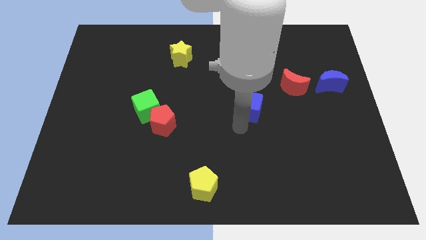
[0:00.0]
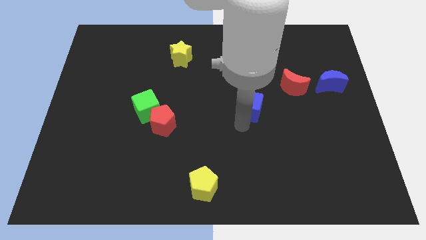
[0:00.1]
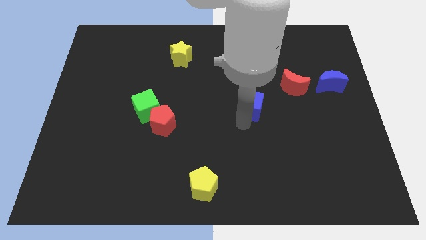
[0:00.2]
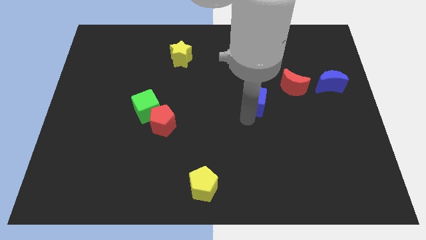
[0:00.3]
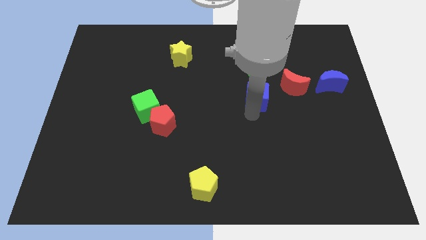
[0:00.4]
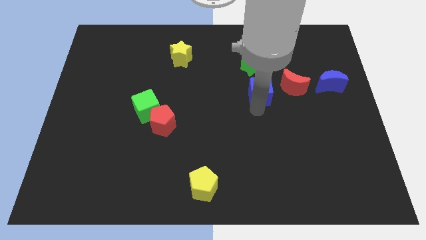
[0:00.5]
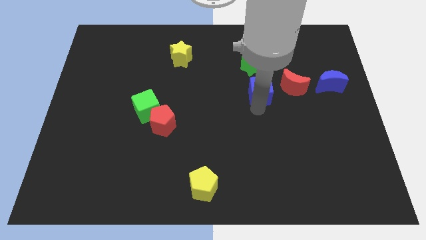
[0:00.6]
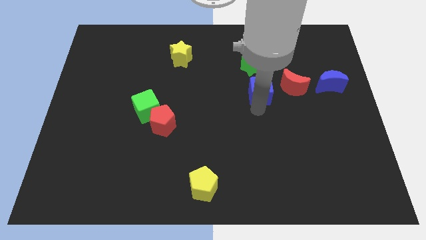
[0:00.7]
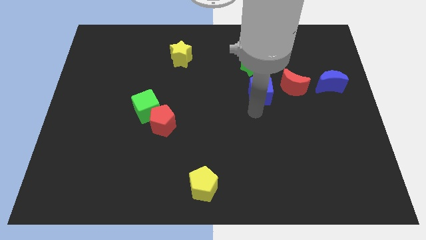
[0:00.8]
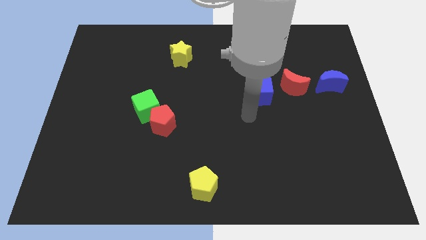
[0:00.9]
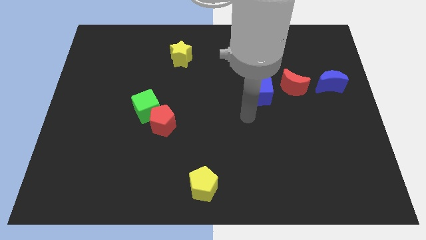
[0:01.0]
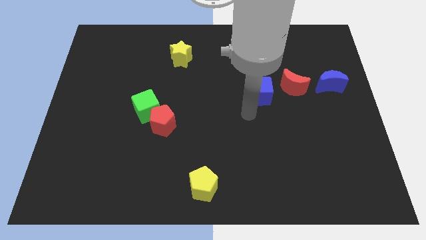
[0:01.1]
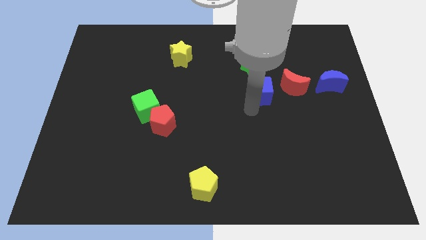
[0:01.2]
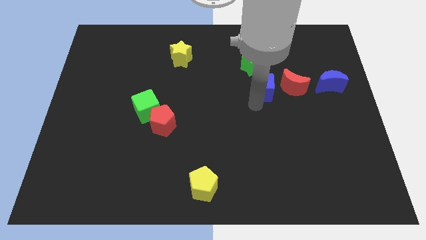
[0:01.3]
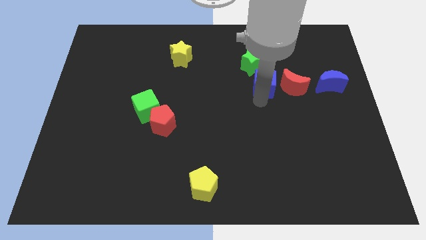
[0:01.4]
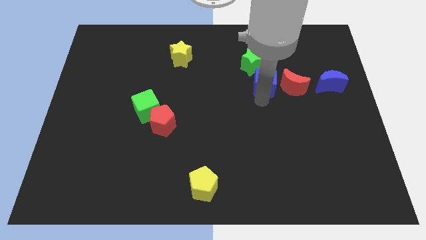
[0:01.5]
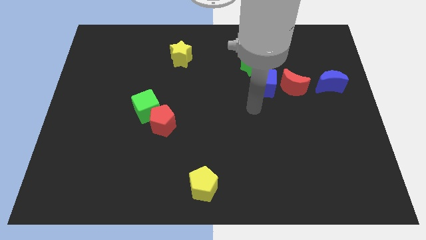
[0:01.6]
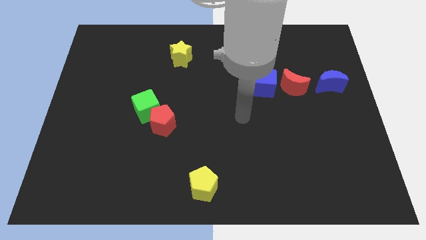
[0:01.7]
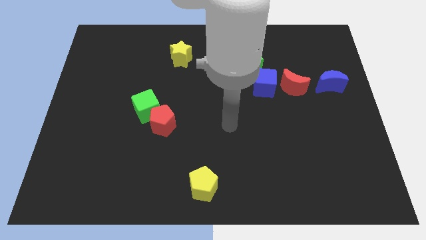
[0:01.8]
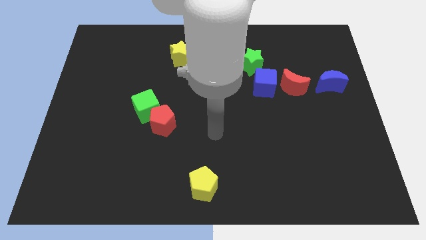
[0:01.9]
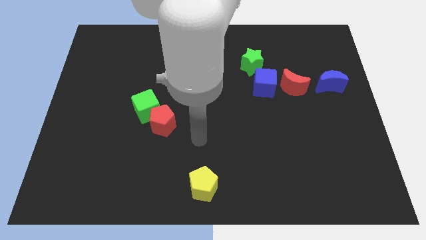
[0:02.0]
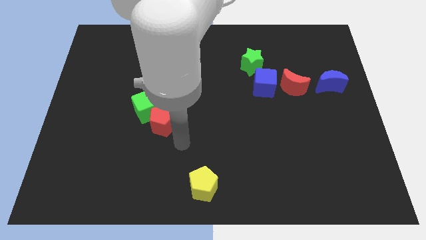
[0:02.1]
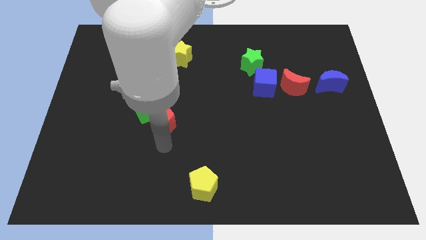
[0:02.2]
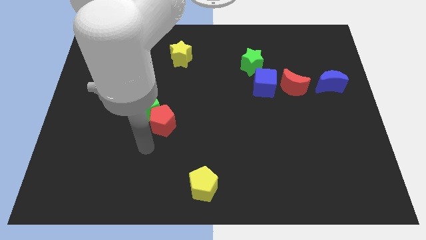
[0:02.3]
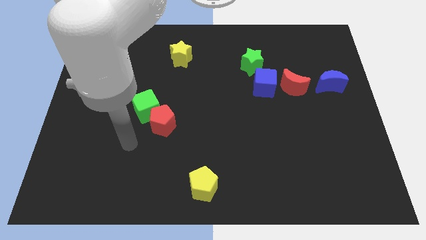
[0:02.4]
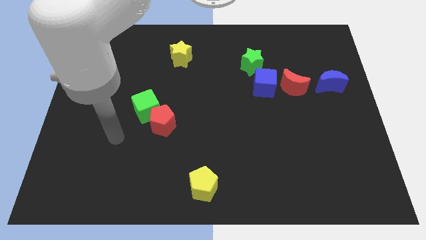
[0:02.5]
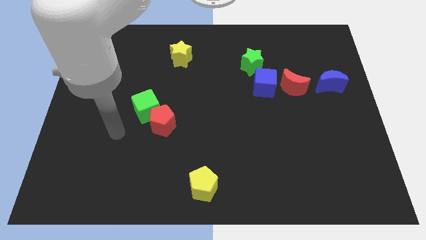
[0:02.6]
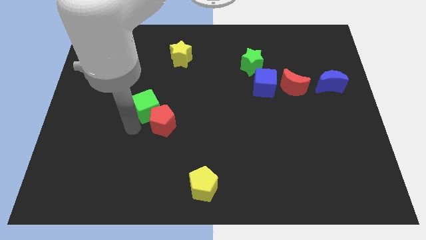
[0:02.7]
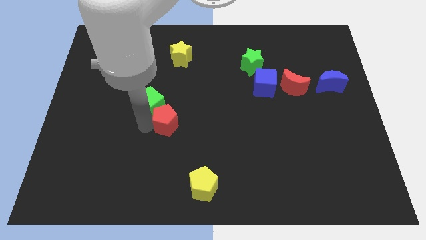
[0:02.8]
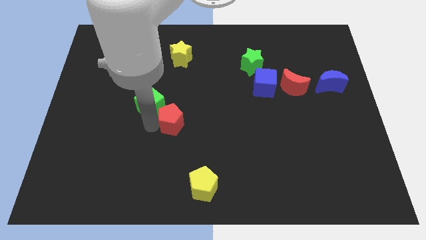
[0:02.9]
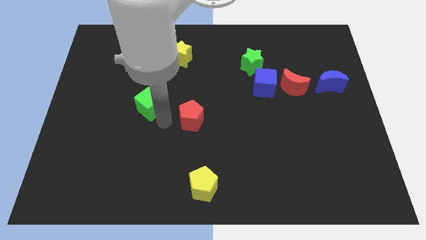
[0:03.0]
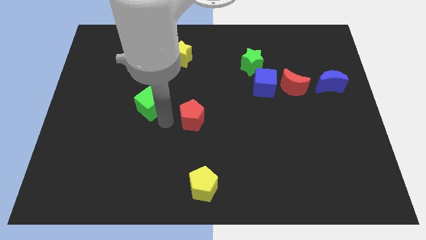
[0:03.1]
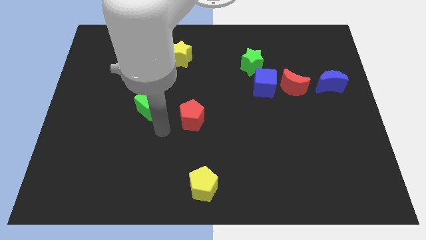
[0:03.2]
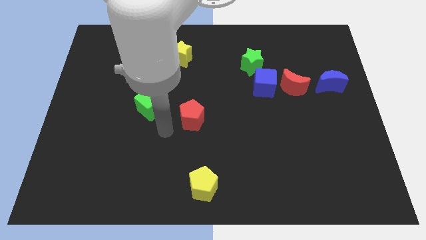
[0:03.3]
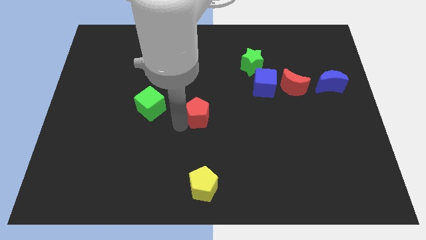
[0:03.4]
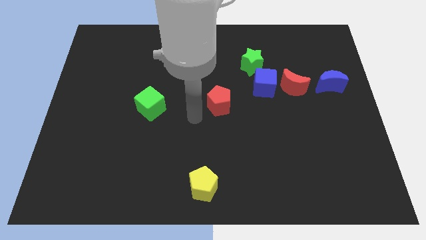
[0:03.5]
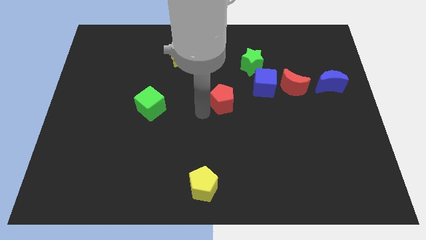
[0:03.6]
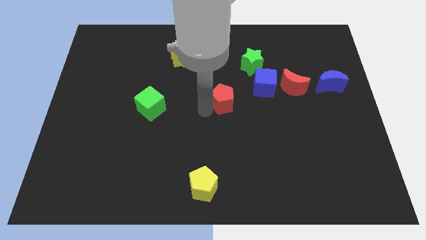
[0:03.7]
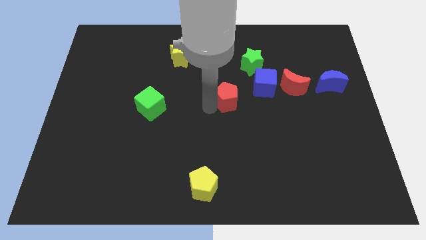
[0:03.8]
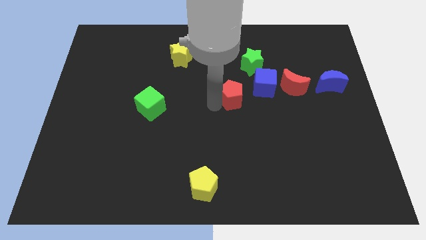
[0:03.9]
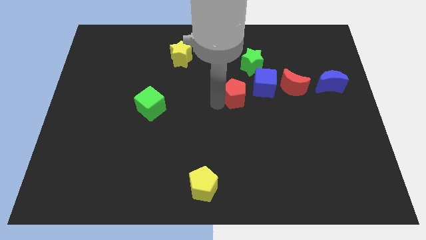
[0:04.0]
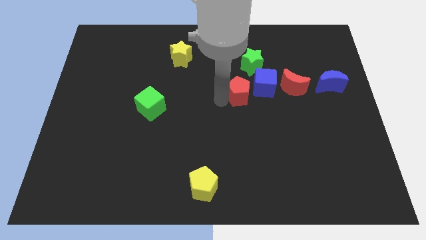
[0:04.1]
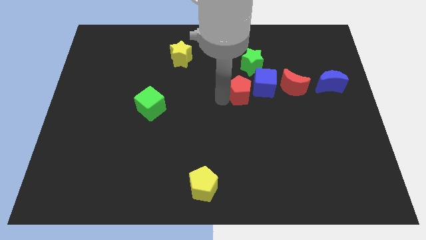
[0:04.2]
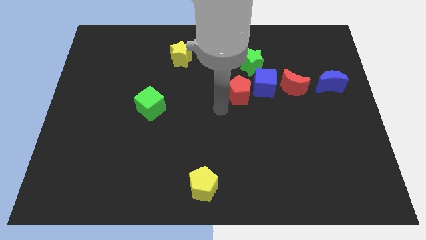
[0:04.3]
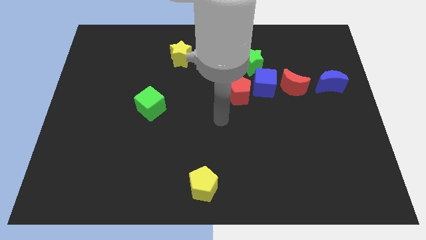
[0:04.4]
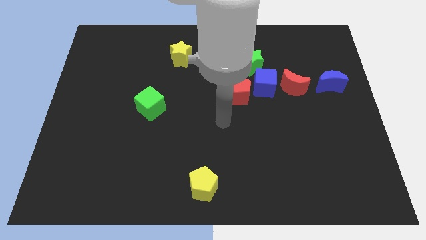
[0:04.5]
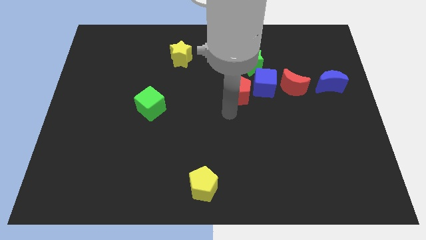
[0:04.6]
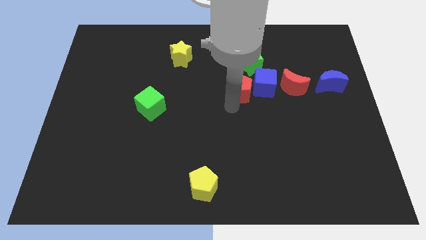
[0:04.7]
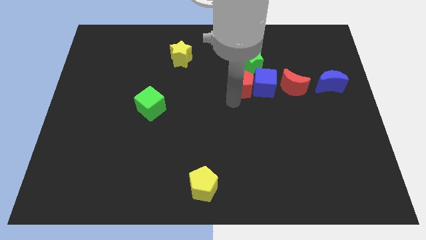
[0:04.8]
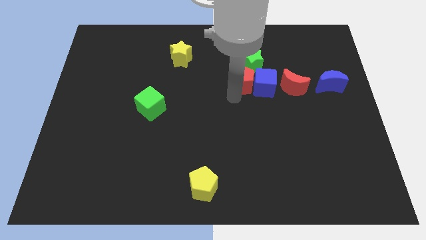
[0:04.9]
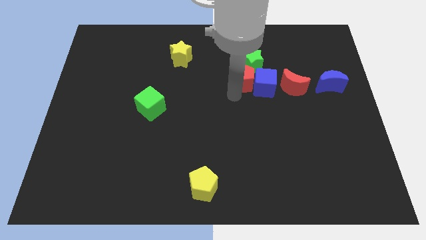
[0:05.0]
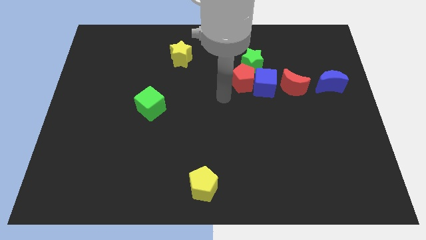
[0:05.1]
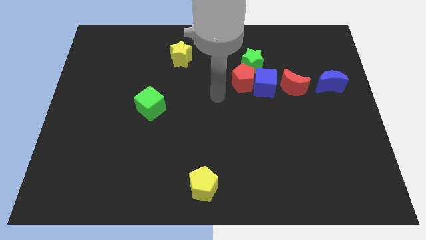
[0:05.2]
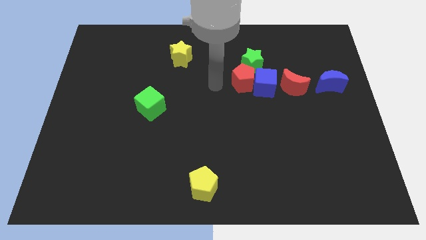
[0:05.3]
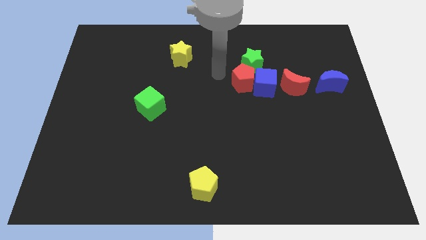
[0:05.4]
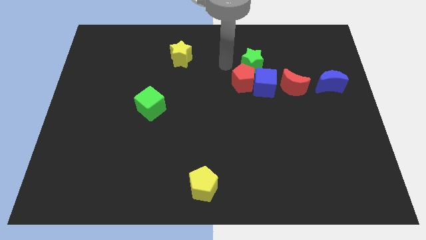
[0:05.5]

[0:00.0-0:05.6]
adjust the red and blue blocks to form a horizontal line

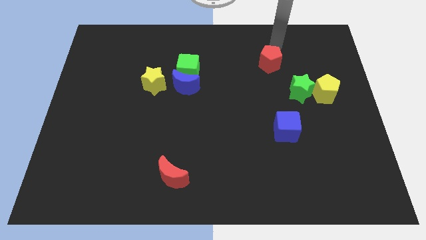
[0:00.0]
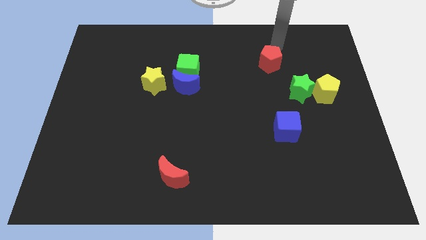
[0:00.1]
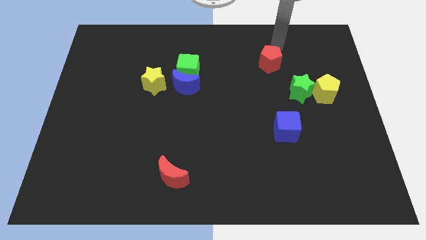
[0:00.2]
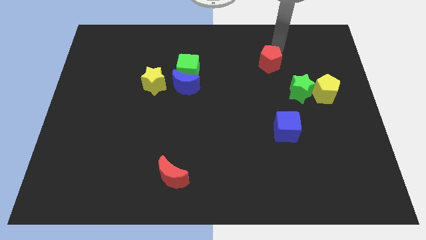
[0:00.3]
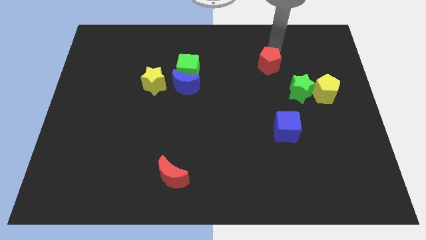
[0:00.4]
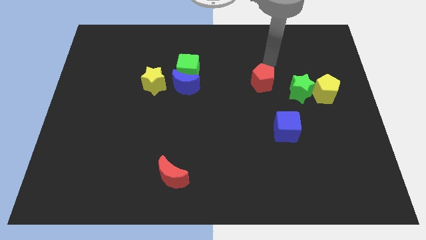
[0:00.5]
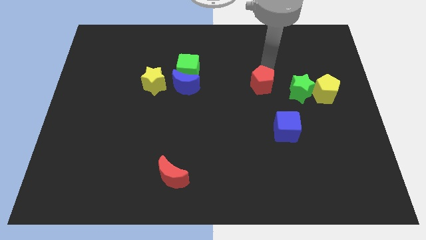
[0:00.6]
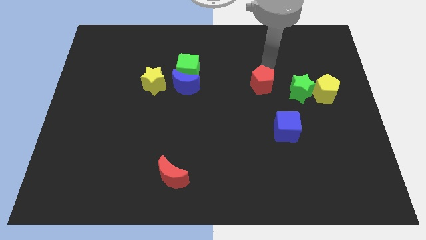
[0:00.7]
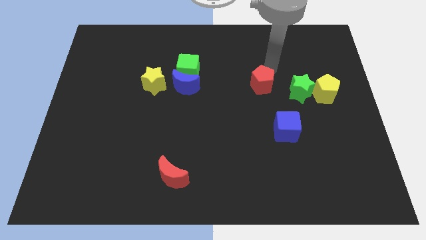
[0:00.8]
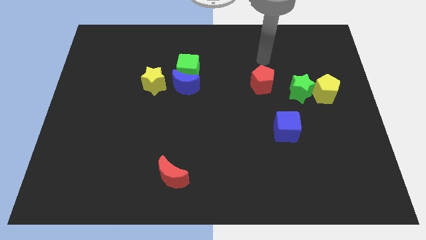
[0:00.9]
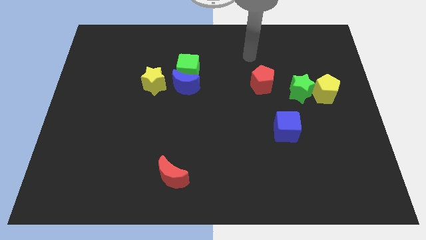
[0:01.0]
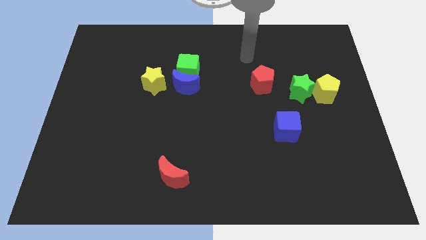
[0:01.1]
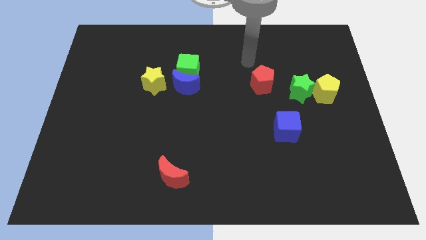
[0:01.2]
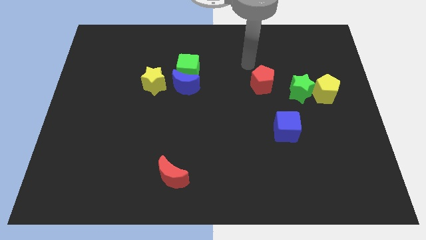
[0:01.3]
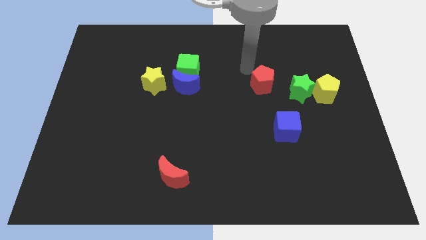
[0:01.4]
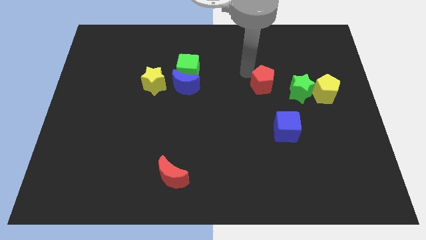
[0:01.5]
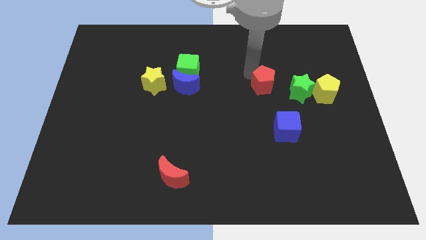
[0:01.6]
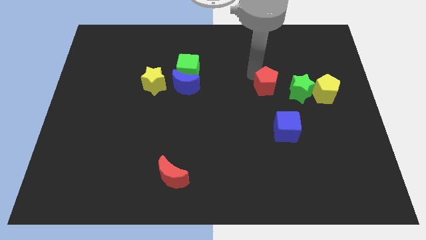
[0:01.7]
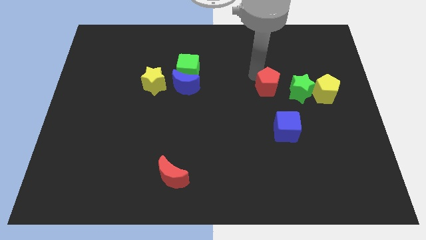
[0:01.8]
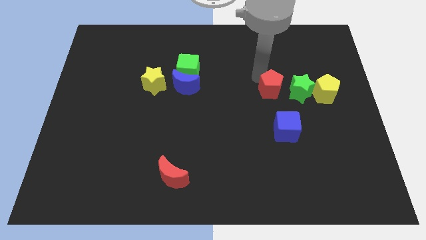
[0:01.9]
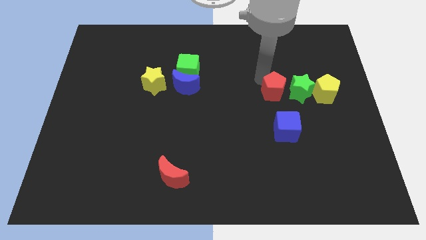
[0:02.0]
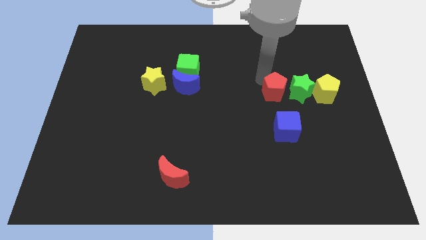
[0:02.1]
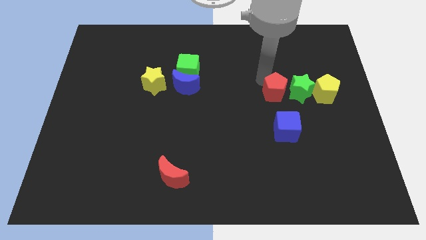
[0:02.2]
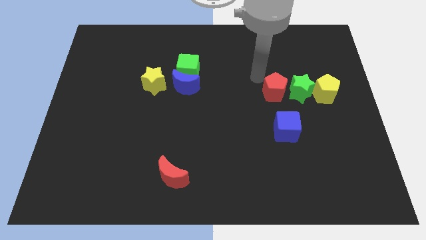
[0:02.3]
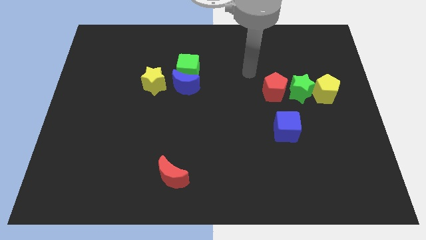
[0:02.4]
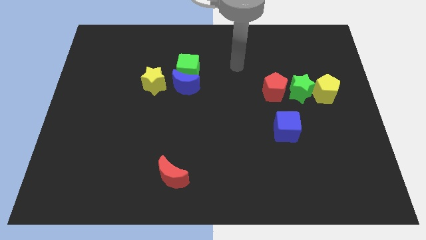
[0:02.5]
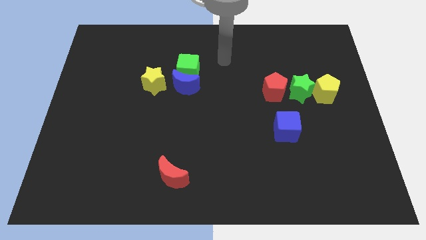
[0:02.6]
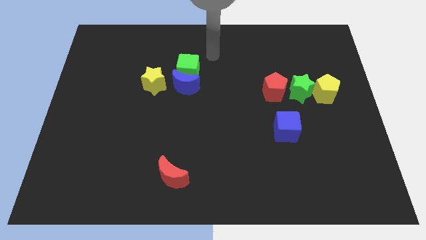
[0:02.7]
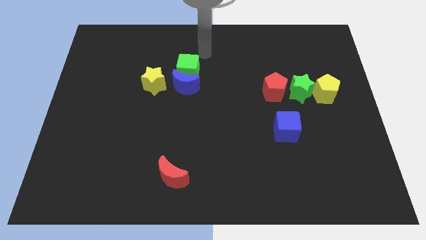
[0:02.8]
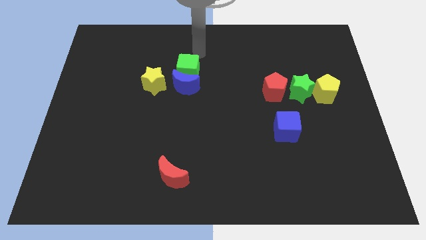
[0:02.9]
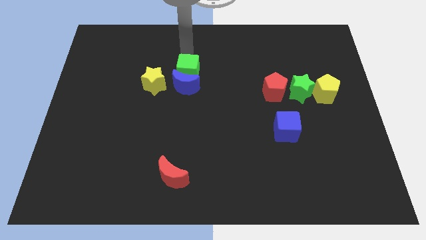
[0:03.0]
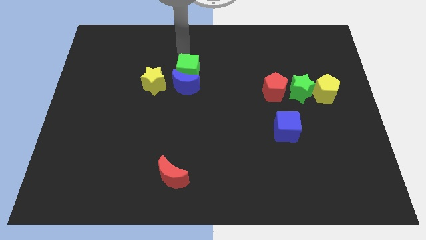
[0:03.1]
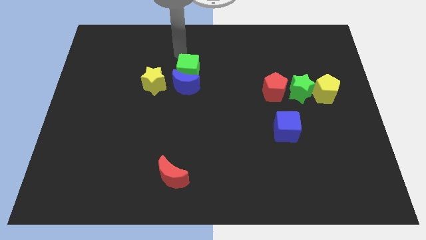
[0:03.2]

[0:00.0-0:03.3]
move the red pentagon left to the green star

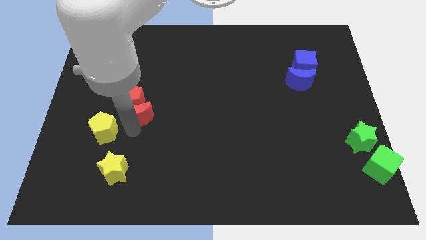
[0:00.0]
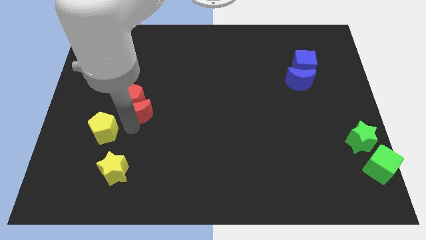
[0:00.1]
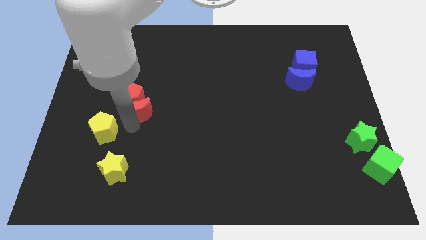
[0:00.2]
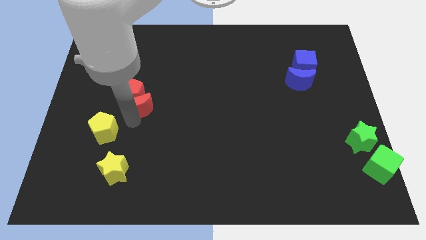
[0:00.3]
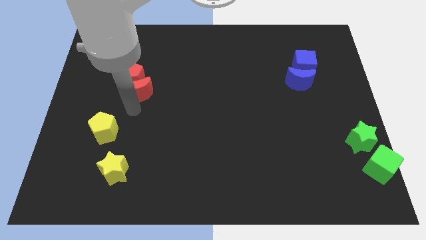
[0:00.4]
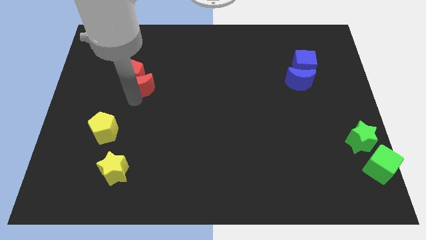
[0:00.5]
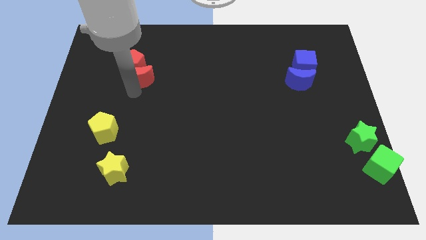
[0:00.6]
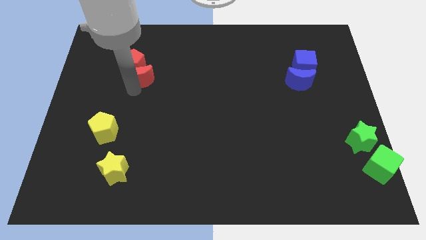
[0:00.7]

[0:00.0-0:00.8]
push the red pentagon with the red crescent towards the top left of the board
